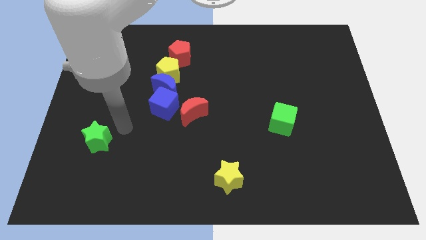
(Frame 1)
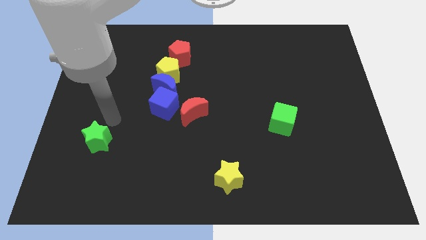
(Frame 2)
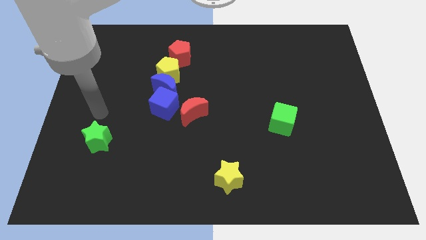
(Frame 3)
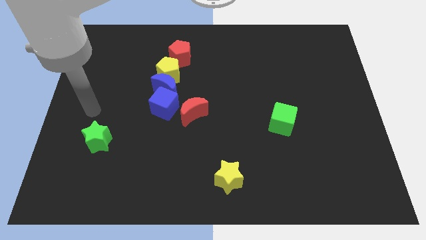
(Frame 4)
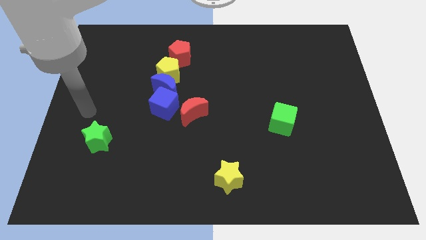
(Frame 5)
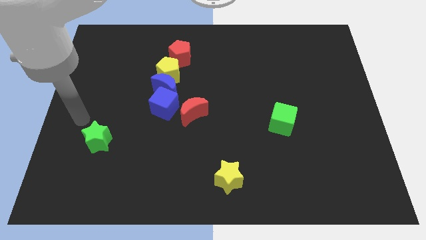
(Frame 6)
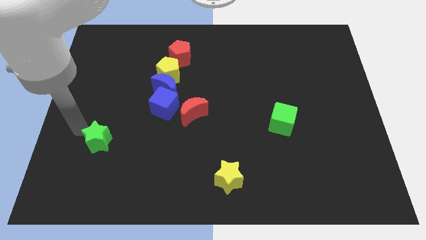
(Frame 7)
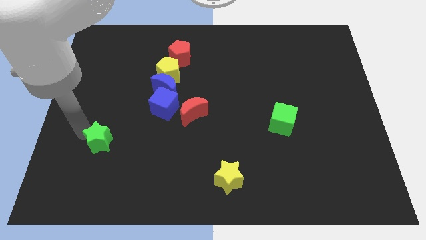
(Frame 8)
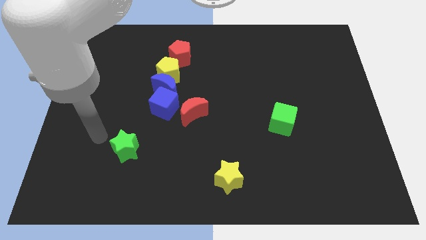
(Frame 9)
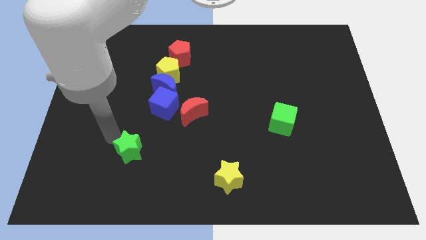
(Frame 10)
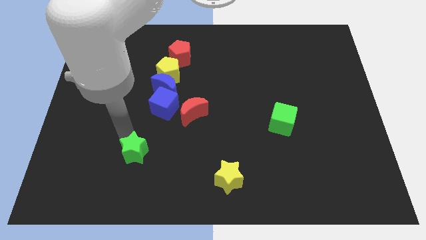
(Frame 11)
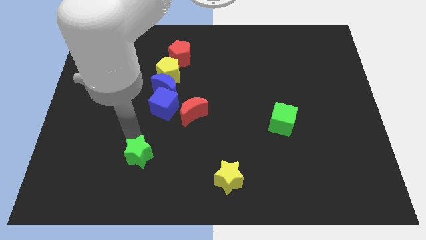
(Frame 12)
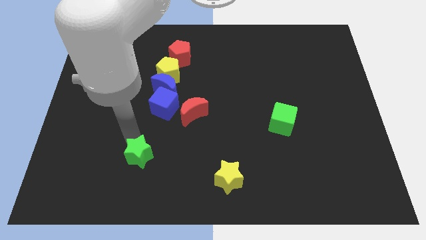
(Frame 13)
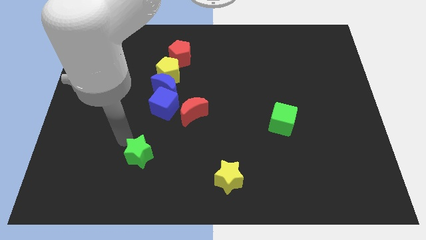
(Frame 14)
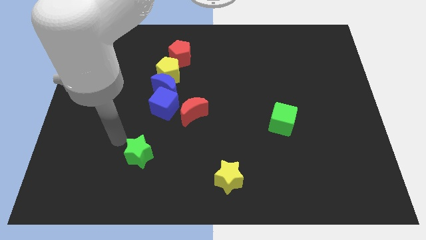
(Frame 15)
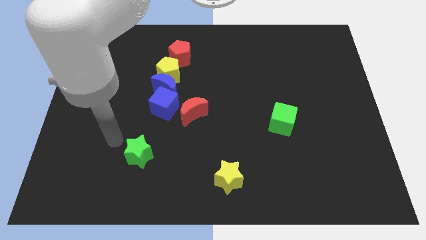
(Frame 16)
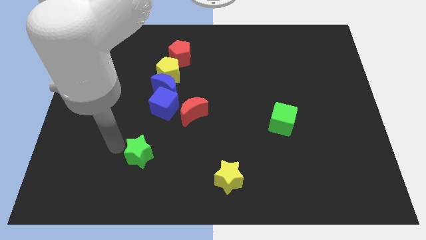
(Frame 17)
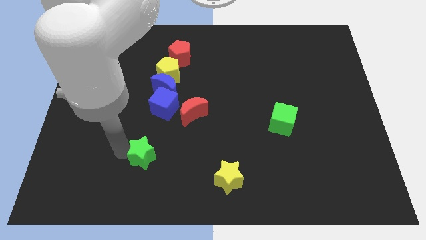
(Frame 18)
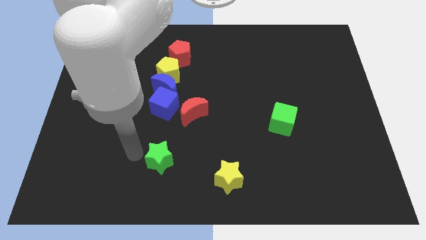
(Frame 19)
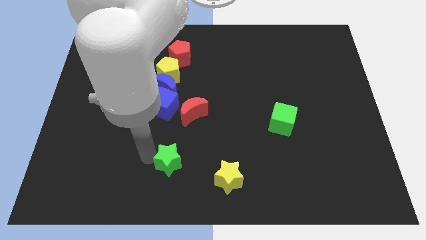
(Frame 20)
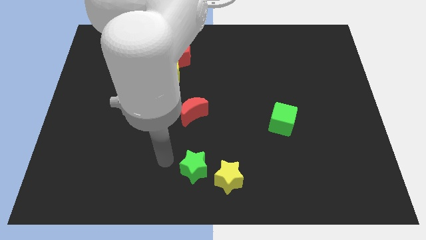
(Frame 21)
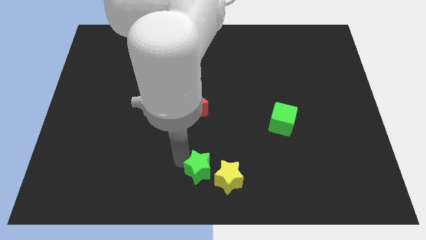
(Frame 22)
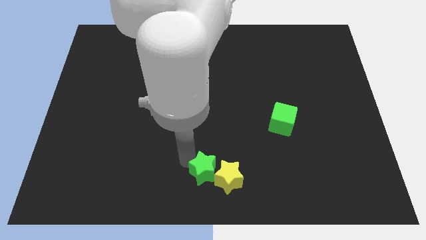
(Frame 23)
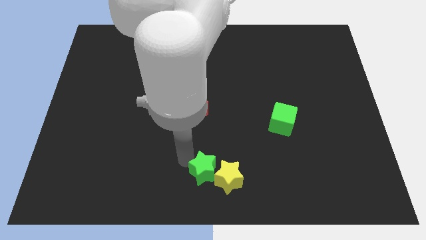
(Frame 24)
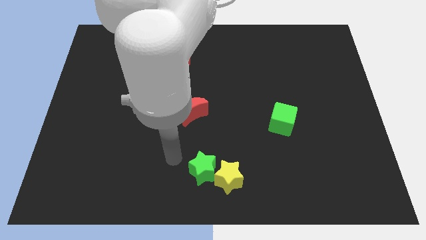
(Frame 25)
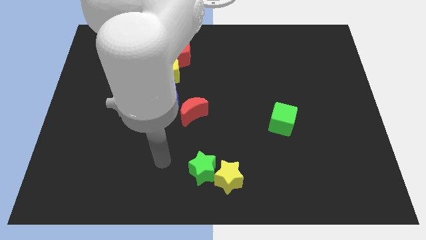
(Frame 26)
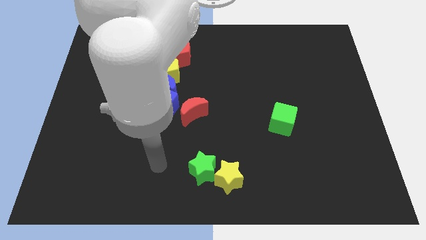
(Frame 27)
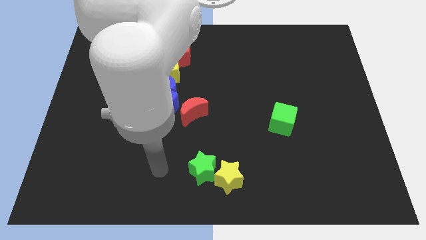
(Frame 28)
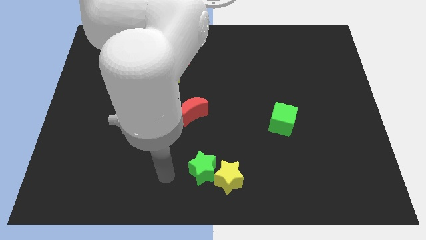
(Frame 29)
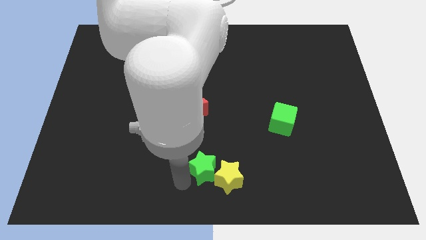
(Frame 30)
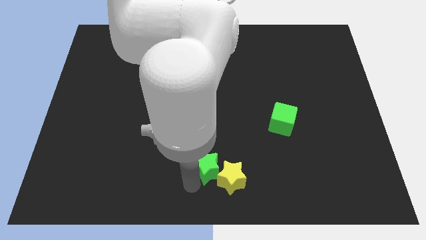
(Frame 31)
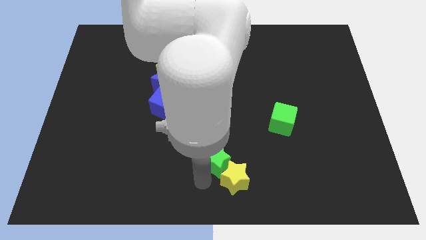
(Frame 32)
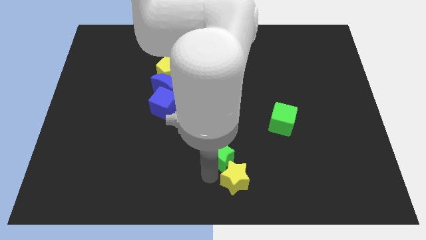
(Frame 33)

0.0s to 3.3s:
slide the green star into the left side of the yellow star

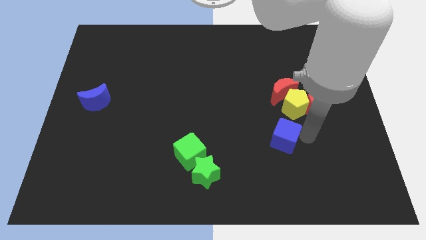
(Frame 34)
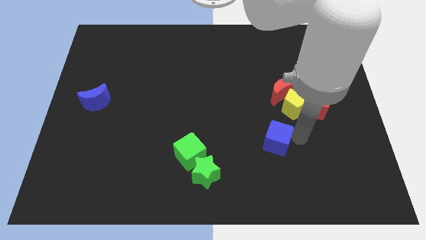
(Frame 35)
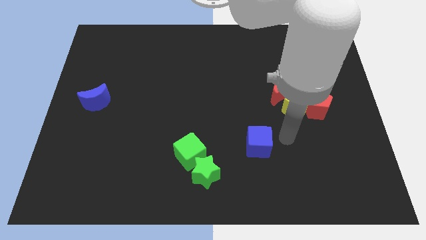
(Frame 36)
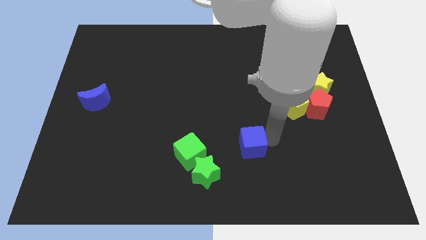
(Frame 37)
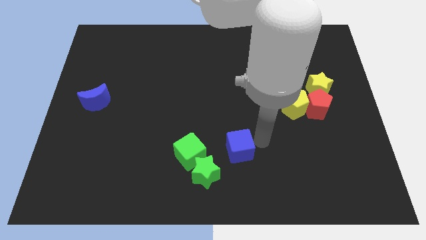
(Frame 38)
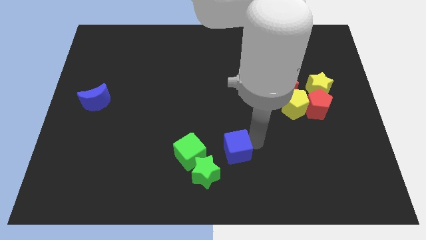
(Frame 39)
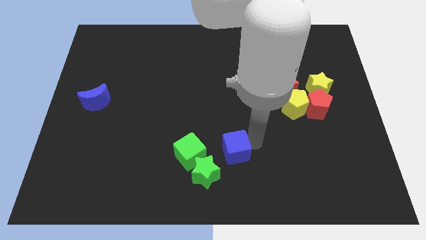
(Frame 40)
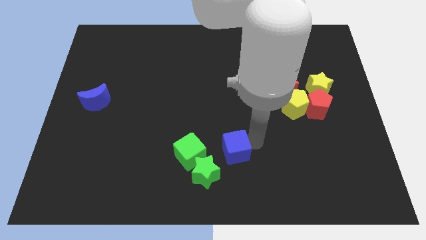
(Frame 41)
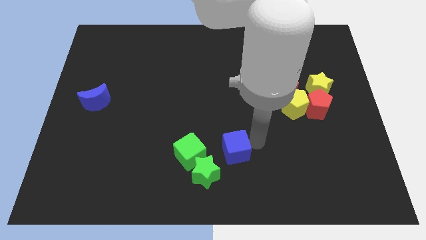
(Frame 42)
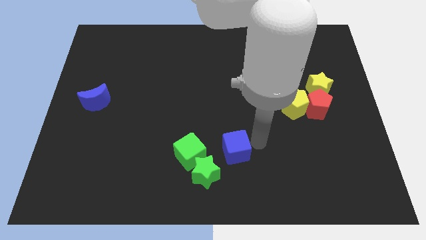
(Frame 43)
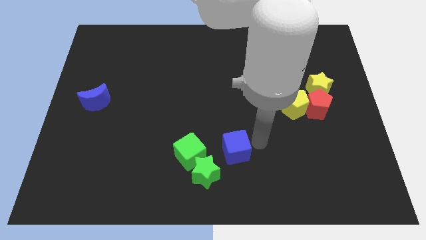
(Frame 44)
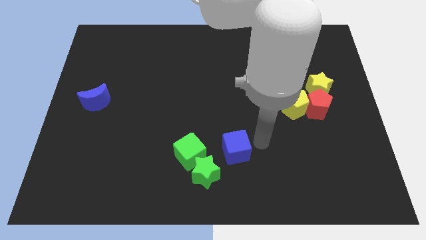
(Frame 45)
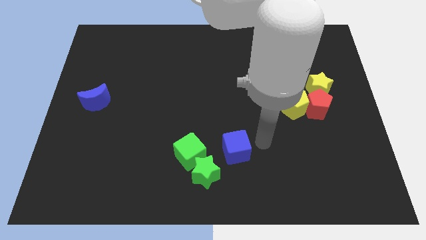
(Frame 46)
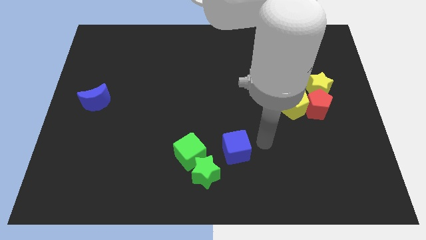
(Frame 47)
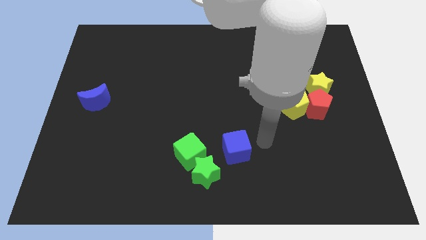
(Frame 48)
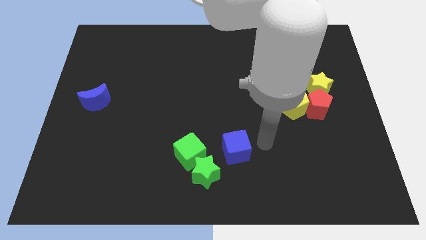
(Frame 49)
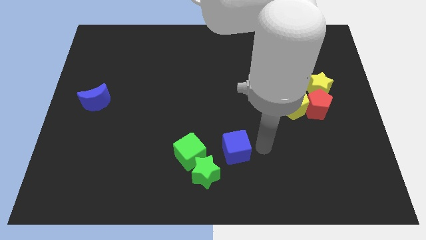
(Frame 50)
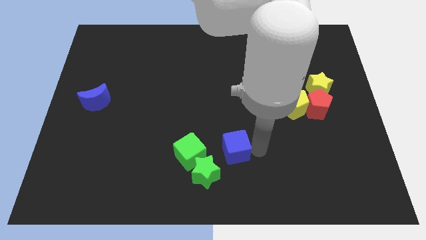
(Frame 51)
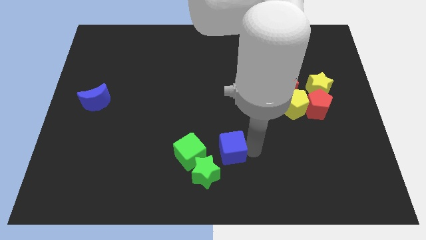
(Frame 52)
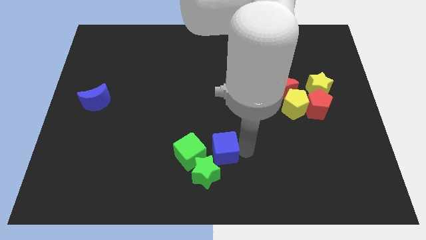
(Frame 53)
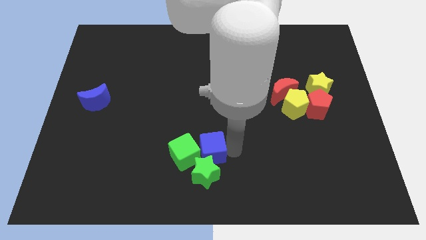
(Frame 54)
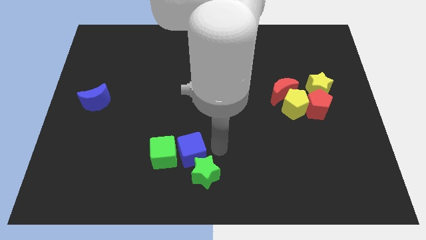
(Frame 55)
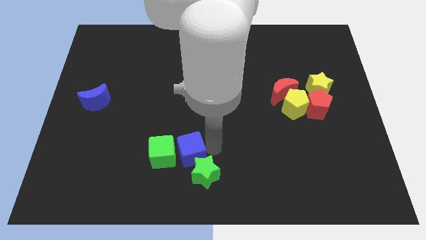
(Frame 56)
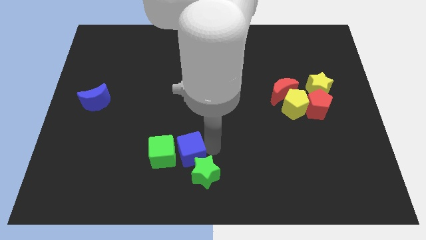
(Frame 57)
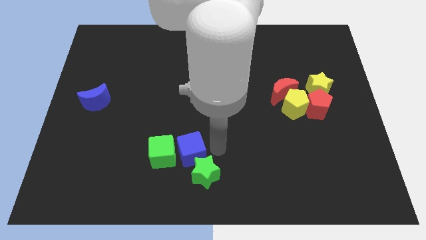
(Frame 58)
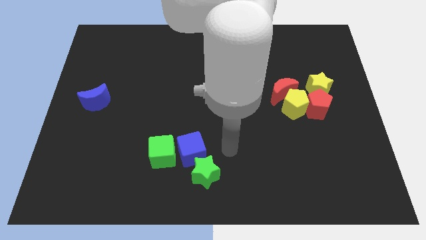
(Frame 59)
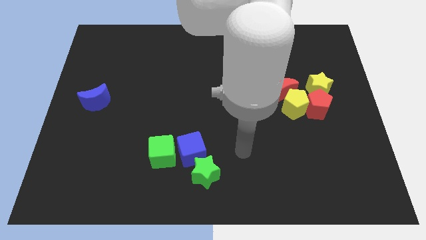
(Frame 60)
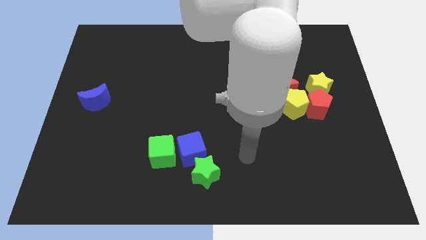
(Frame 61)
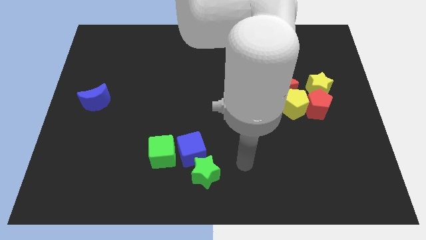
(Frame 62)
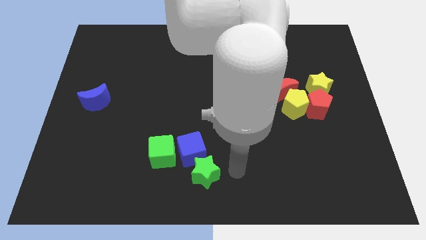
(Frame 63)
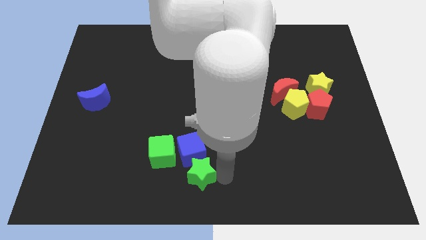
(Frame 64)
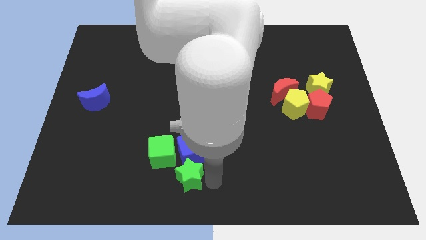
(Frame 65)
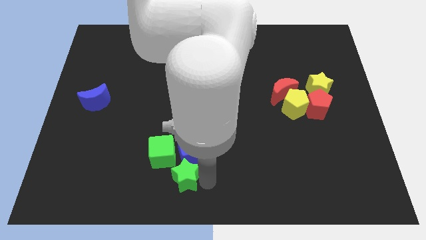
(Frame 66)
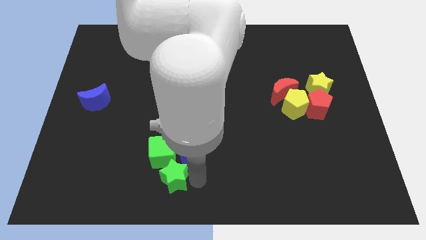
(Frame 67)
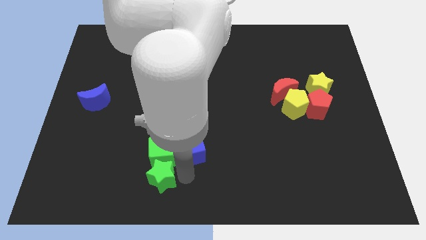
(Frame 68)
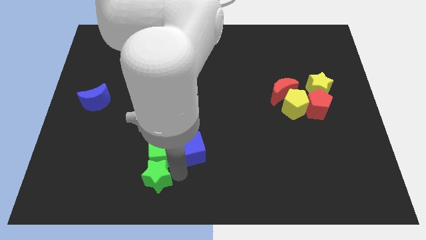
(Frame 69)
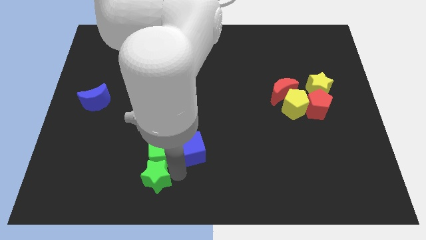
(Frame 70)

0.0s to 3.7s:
move the blue cube into the green cube

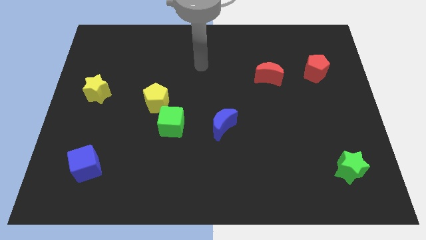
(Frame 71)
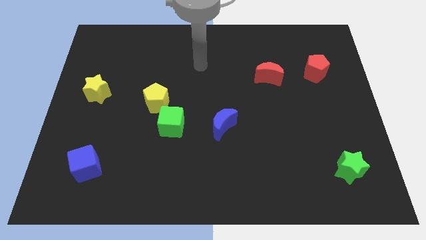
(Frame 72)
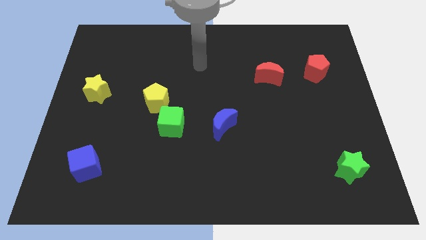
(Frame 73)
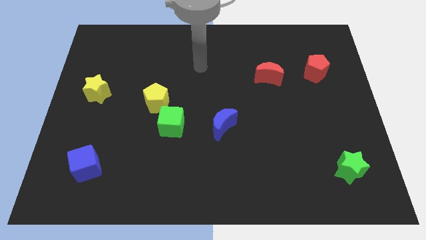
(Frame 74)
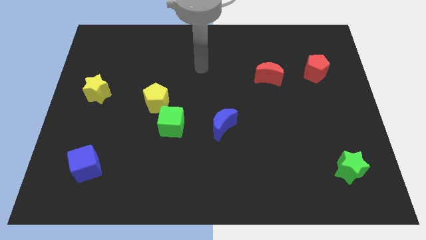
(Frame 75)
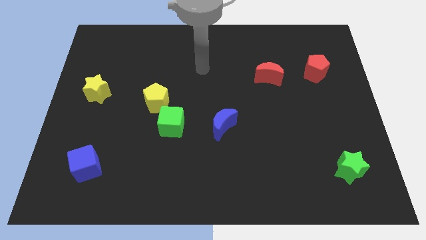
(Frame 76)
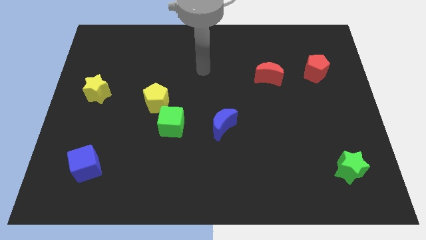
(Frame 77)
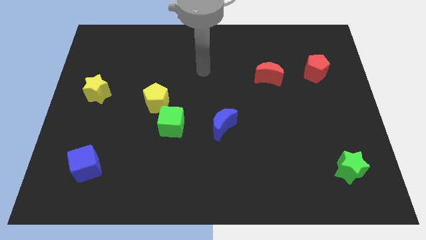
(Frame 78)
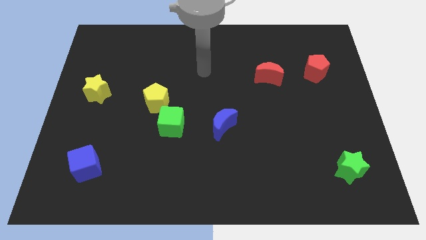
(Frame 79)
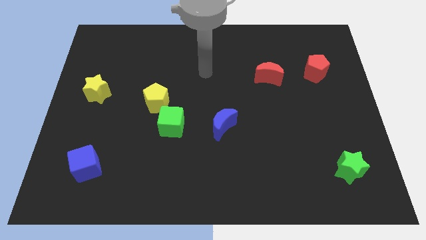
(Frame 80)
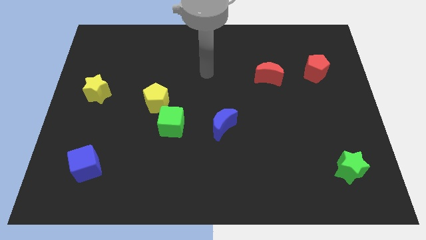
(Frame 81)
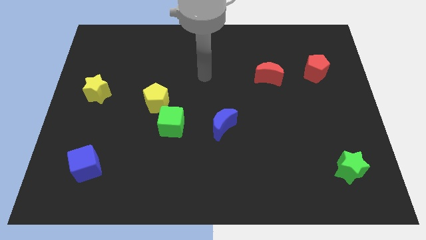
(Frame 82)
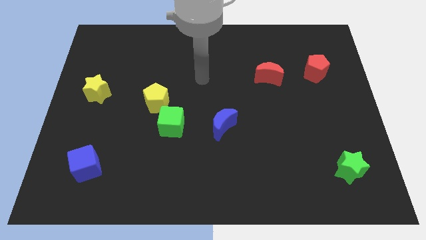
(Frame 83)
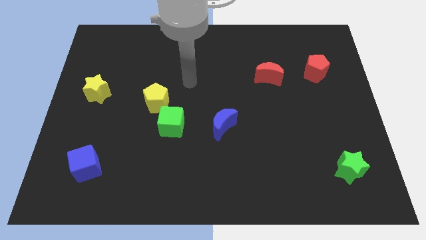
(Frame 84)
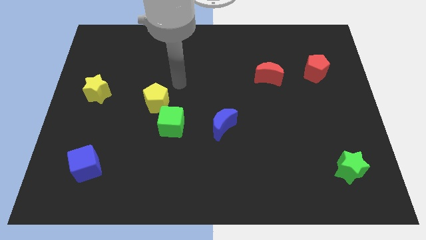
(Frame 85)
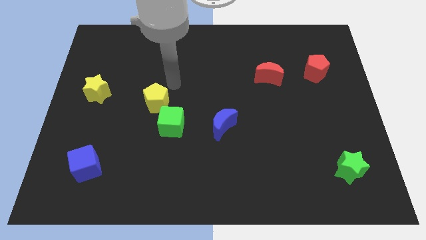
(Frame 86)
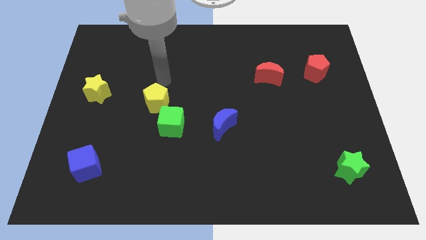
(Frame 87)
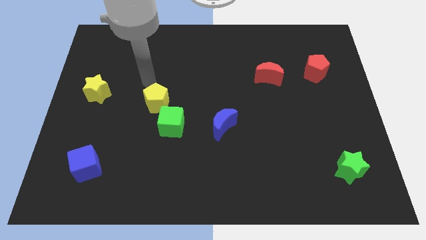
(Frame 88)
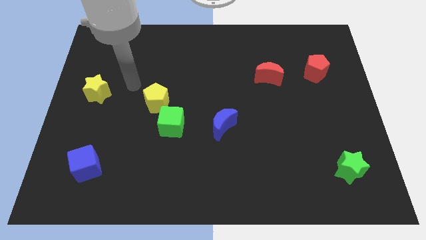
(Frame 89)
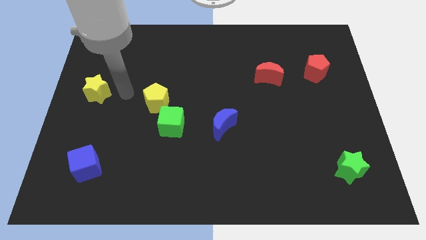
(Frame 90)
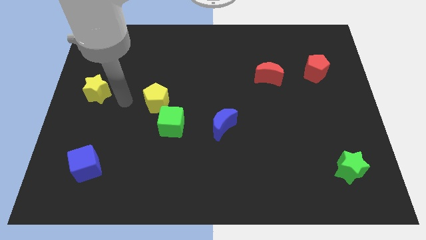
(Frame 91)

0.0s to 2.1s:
place your arm in between the yellow blocks
